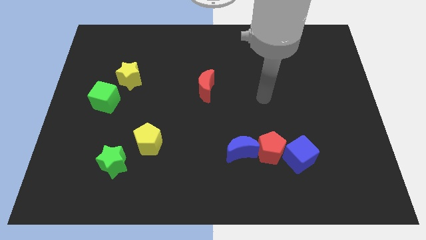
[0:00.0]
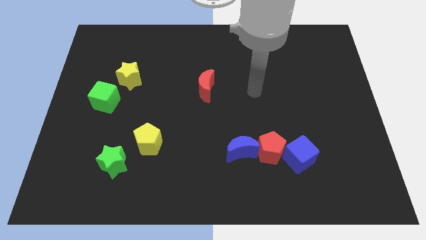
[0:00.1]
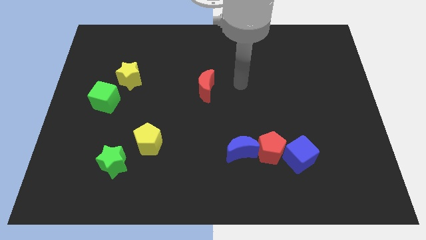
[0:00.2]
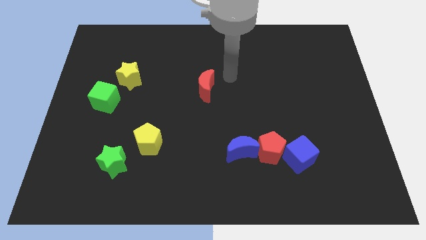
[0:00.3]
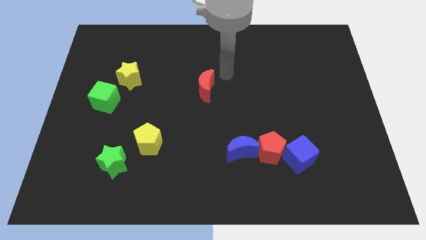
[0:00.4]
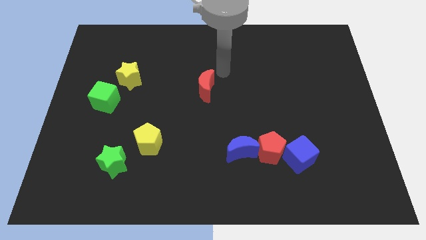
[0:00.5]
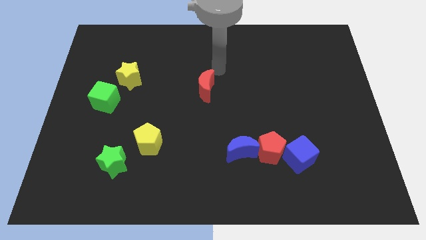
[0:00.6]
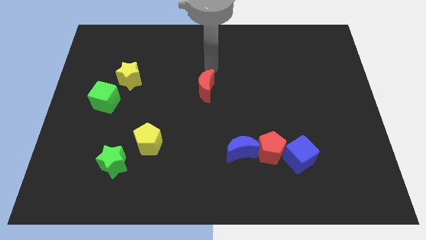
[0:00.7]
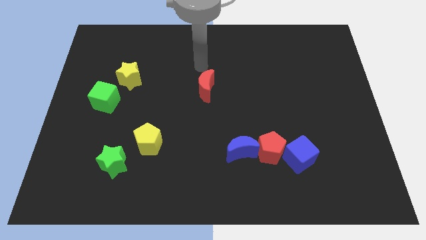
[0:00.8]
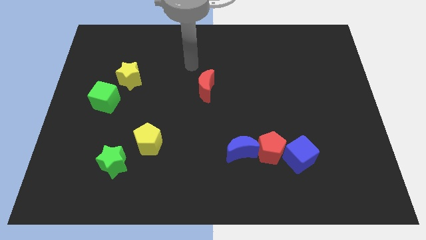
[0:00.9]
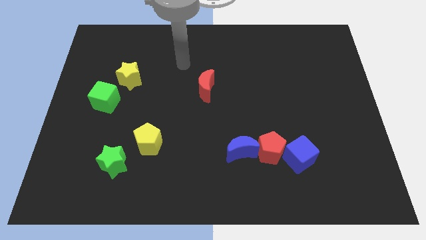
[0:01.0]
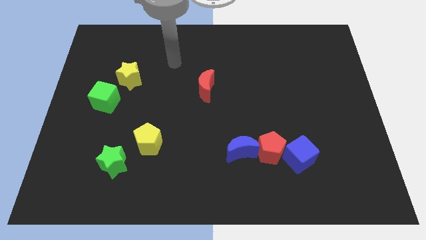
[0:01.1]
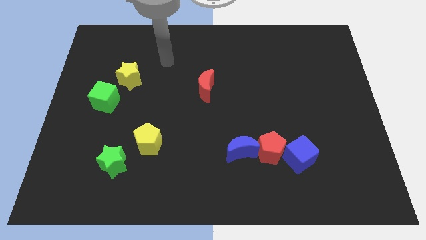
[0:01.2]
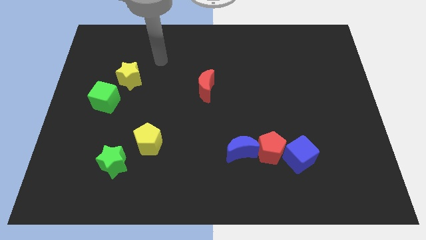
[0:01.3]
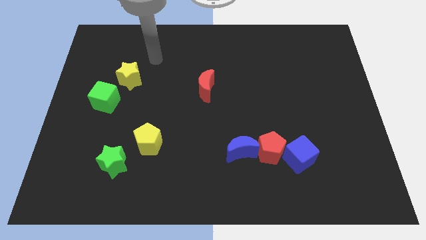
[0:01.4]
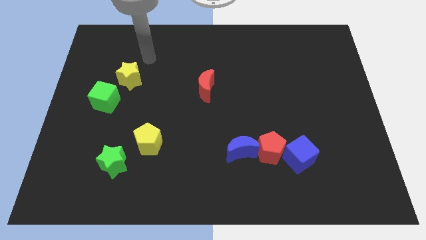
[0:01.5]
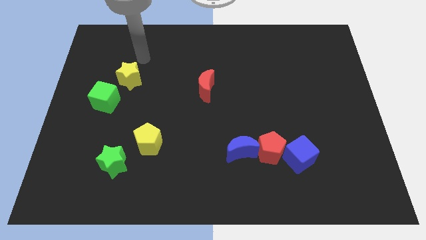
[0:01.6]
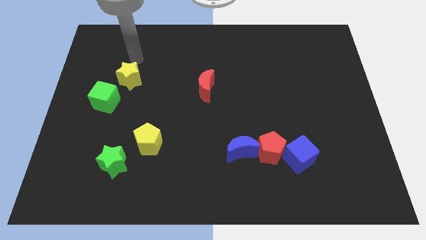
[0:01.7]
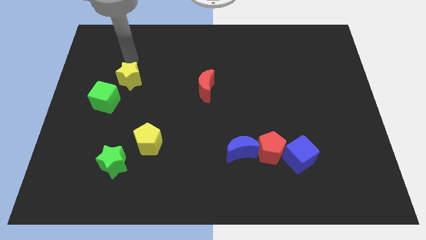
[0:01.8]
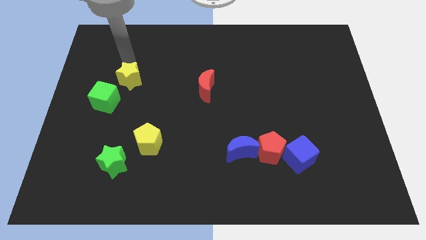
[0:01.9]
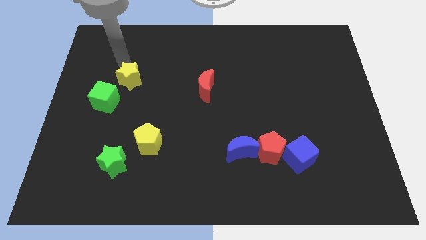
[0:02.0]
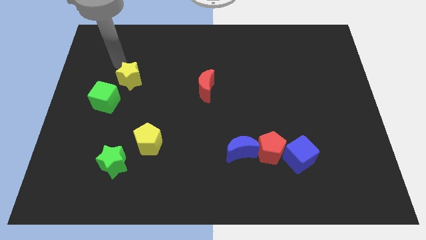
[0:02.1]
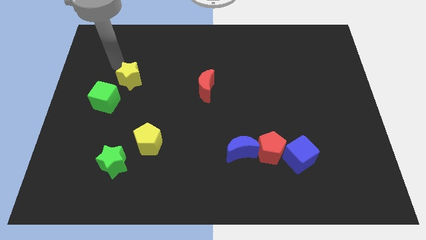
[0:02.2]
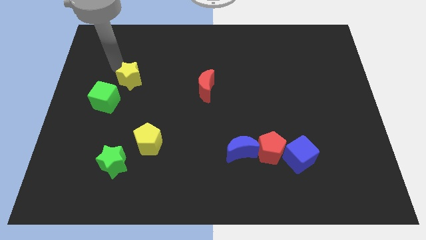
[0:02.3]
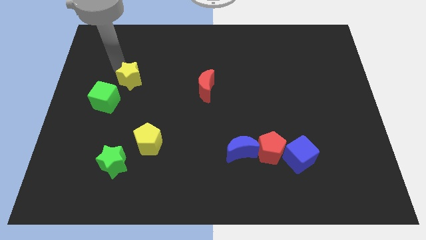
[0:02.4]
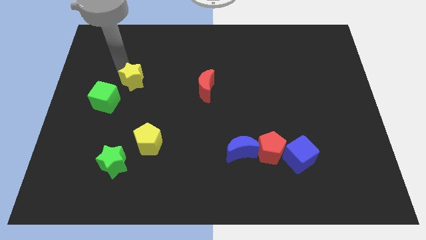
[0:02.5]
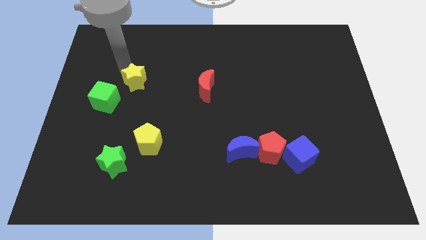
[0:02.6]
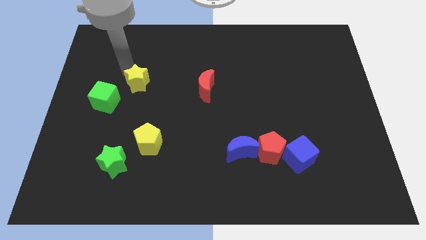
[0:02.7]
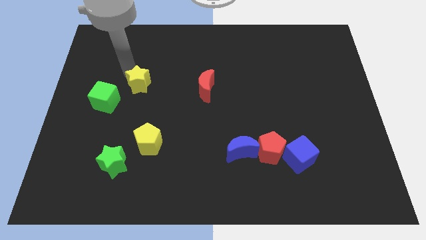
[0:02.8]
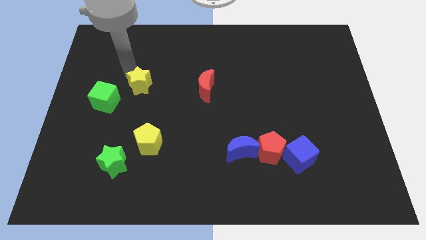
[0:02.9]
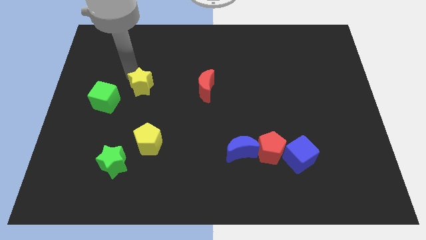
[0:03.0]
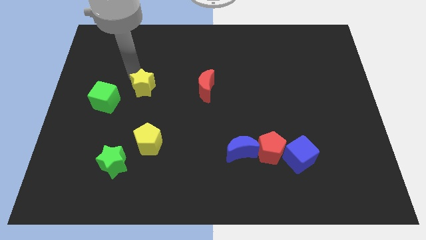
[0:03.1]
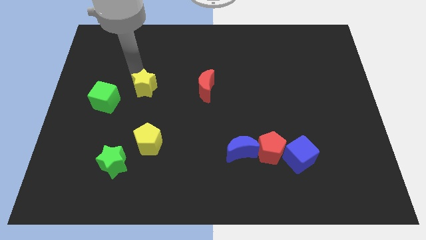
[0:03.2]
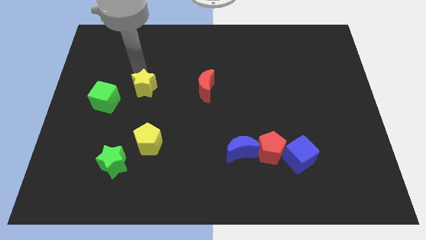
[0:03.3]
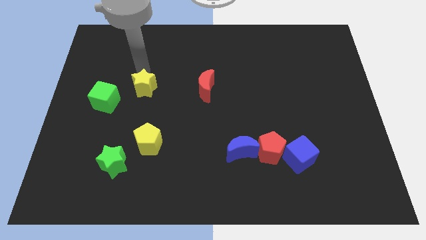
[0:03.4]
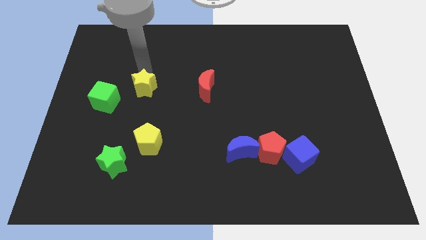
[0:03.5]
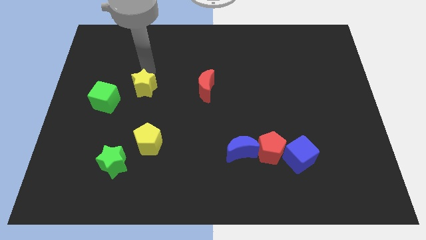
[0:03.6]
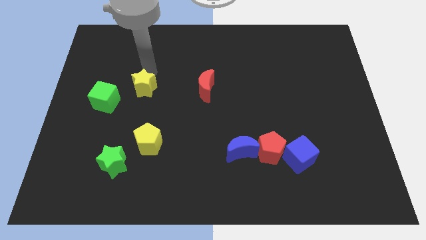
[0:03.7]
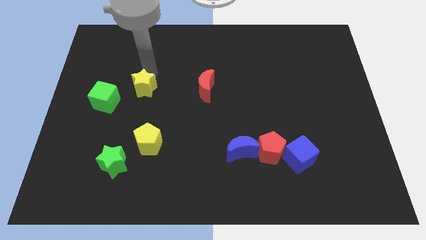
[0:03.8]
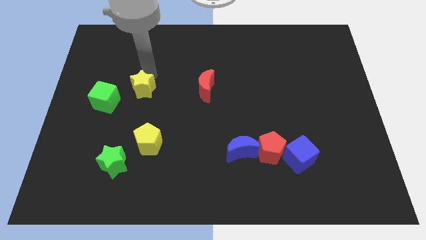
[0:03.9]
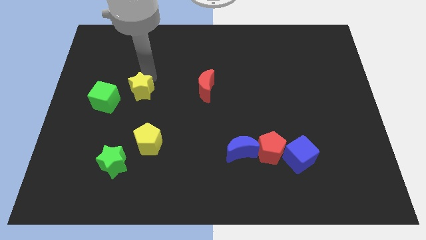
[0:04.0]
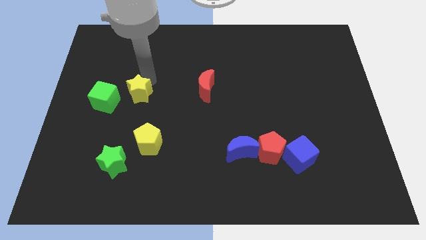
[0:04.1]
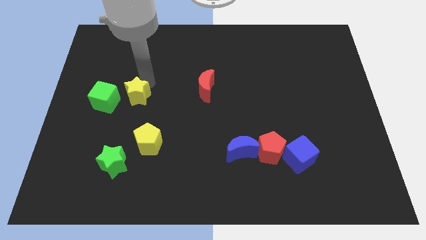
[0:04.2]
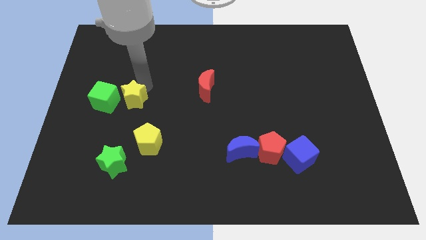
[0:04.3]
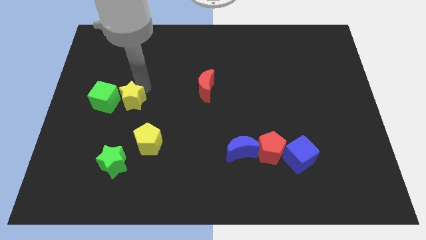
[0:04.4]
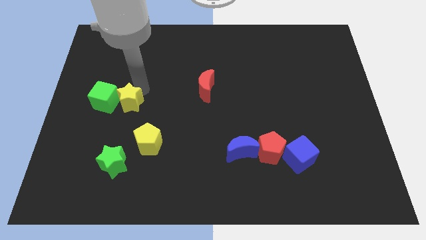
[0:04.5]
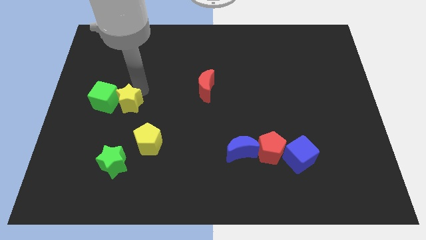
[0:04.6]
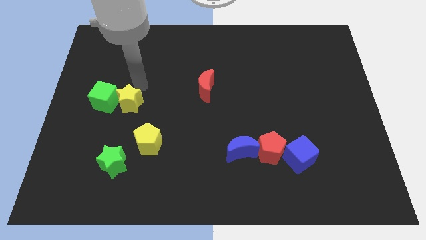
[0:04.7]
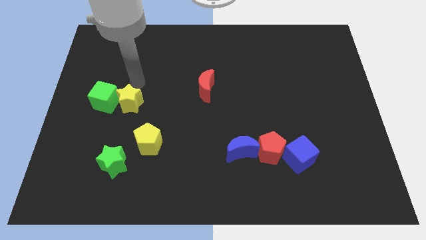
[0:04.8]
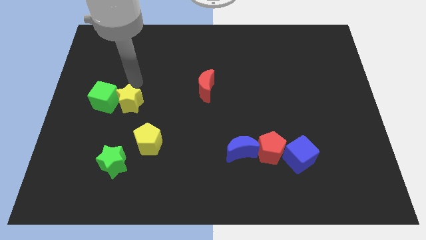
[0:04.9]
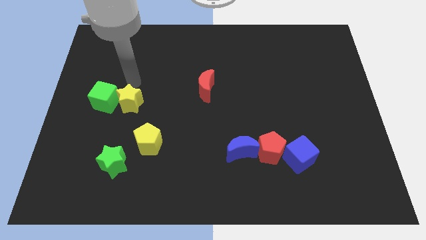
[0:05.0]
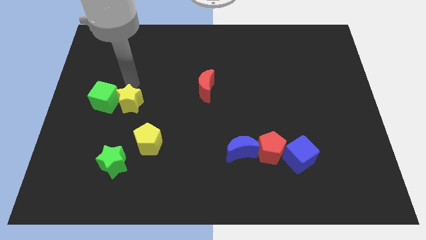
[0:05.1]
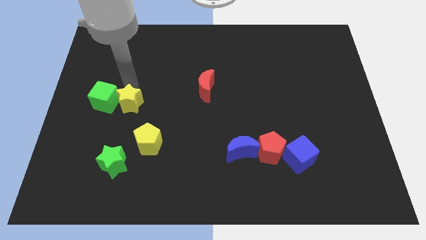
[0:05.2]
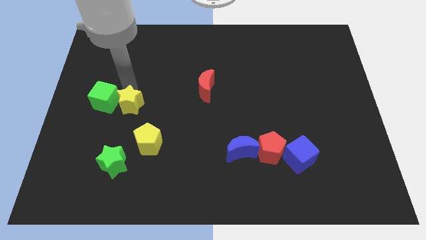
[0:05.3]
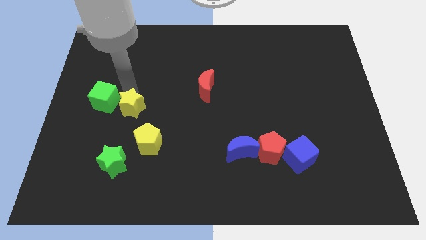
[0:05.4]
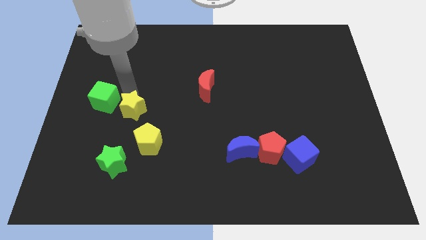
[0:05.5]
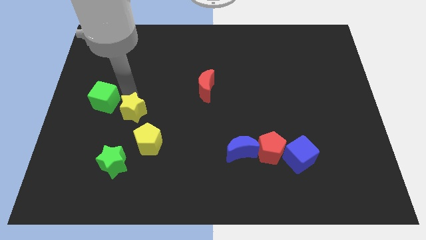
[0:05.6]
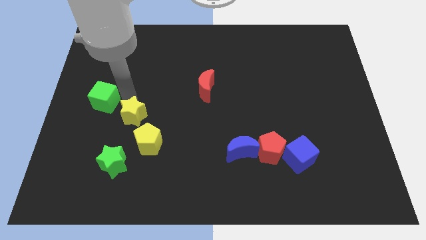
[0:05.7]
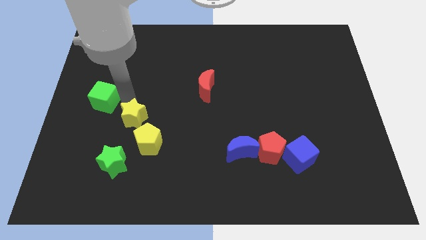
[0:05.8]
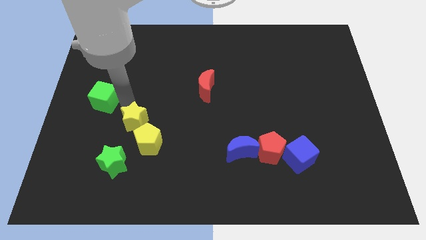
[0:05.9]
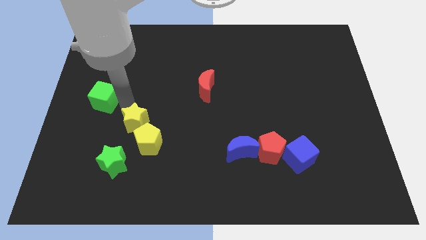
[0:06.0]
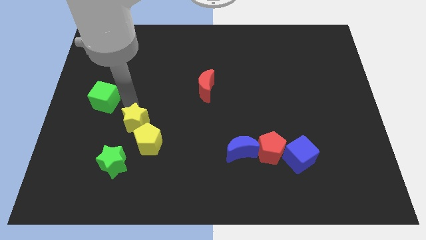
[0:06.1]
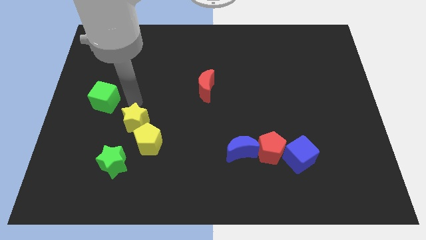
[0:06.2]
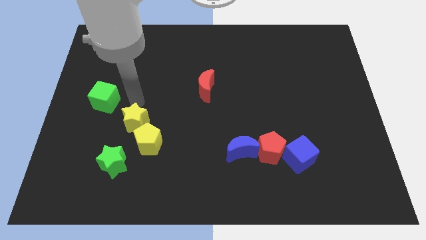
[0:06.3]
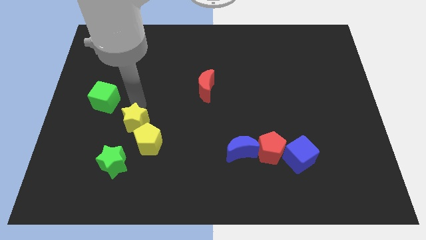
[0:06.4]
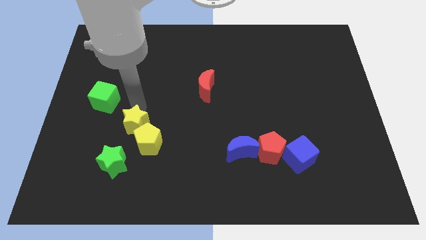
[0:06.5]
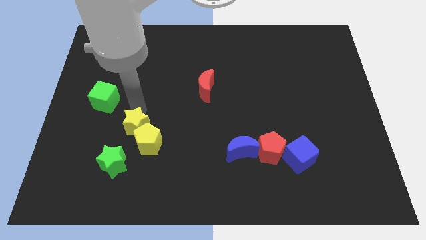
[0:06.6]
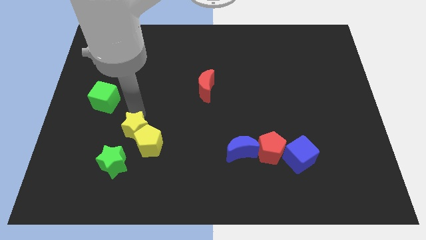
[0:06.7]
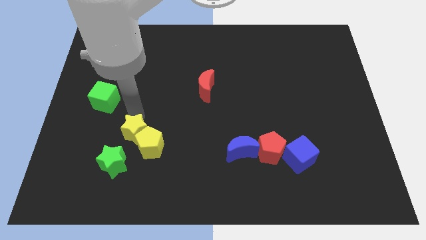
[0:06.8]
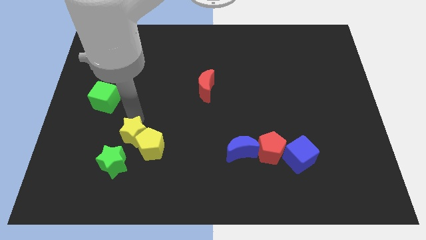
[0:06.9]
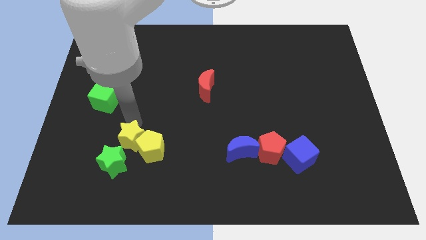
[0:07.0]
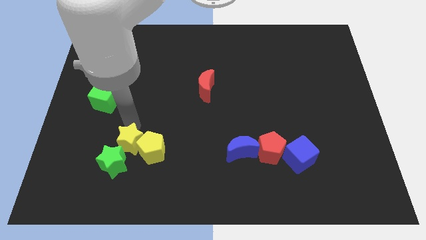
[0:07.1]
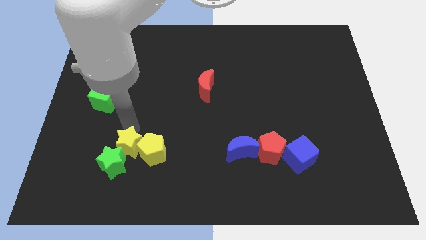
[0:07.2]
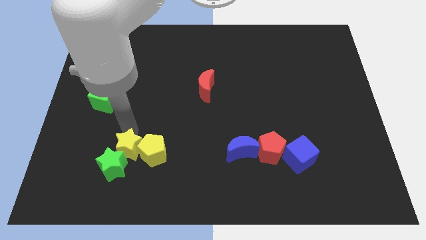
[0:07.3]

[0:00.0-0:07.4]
slide the yellow star towards the green star

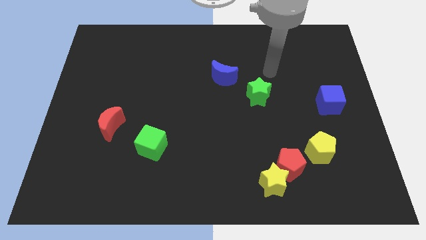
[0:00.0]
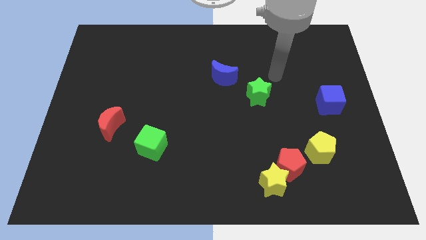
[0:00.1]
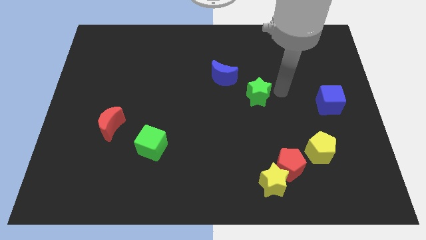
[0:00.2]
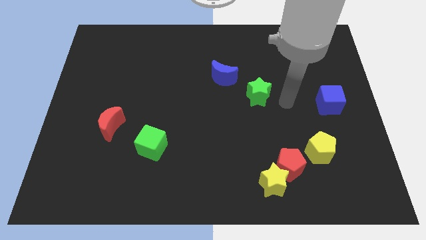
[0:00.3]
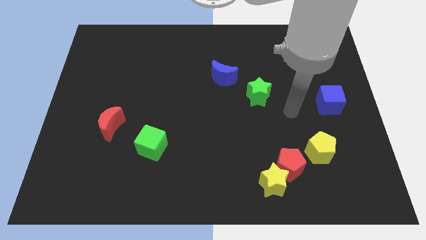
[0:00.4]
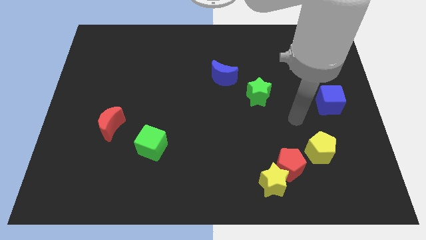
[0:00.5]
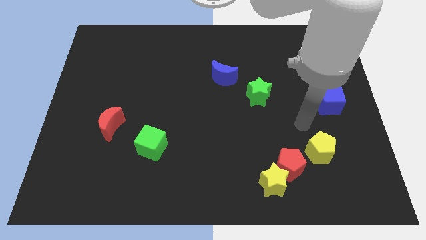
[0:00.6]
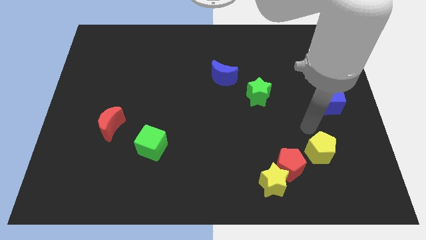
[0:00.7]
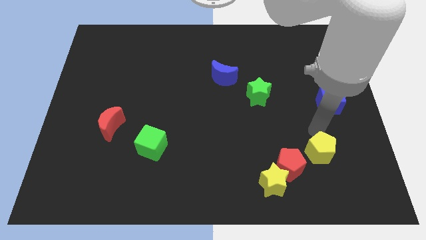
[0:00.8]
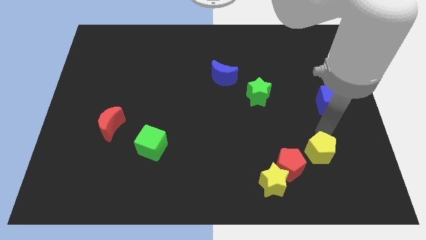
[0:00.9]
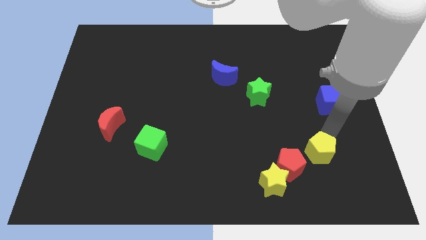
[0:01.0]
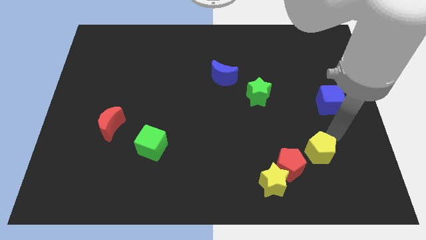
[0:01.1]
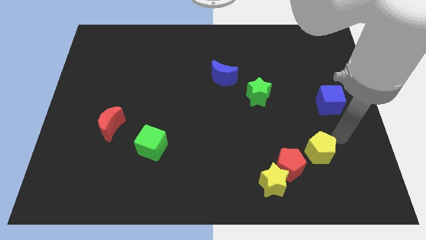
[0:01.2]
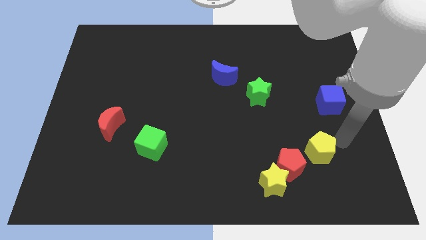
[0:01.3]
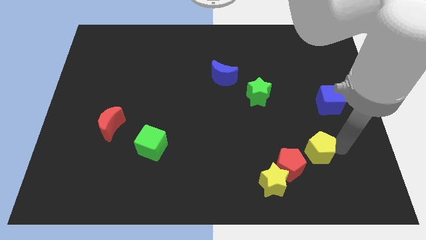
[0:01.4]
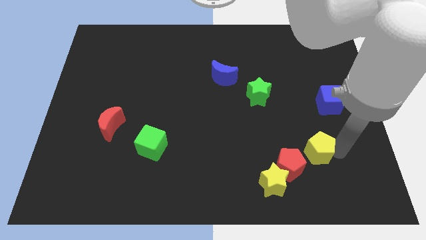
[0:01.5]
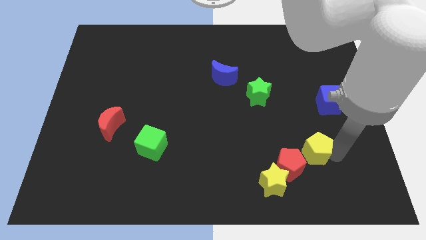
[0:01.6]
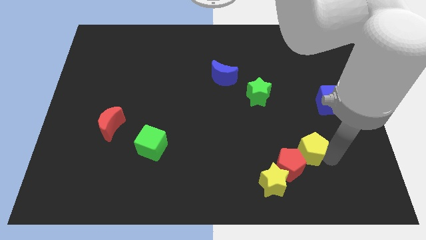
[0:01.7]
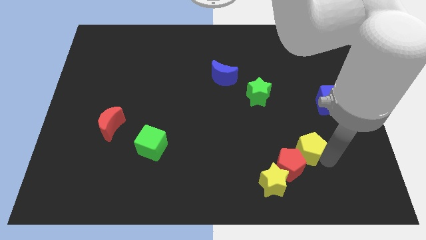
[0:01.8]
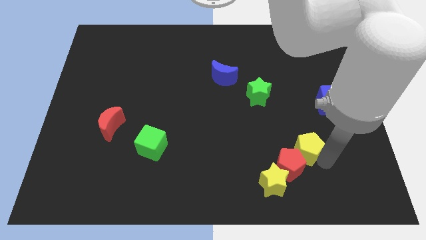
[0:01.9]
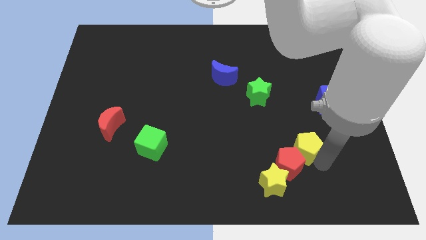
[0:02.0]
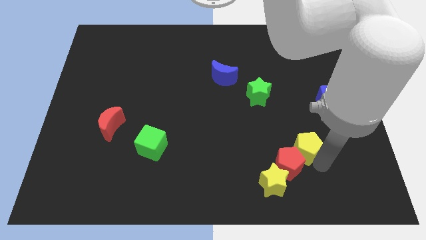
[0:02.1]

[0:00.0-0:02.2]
slide the yellow pentagon towards the red pentagon
